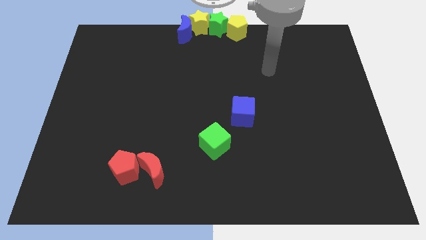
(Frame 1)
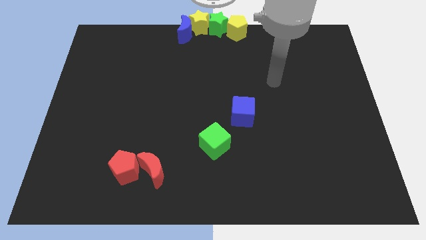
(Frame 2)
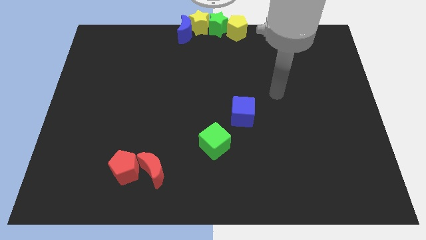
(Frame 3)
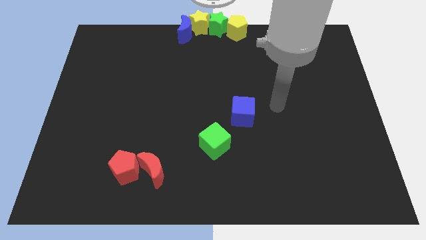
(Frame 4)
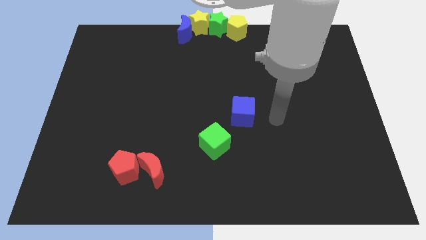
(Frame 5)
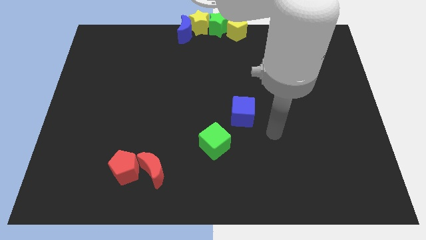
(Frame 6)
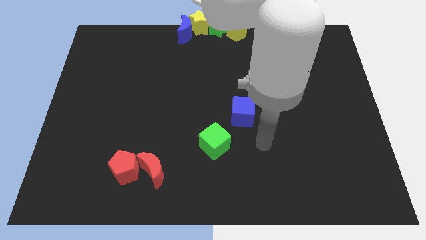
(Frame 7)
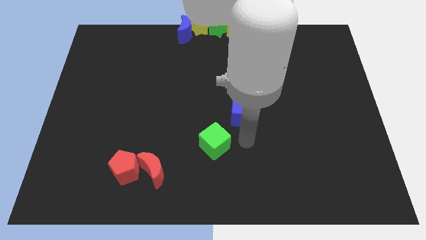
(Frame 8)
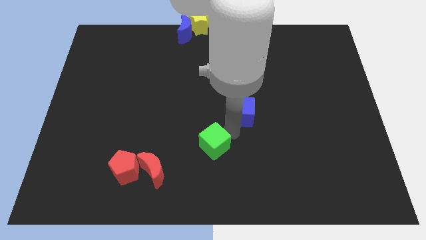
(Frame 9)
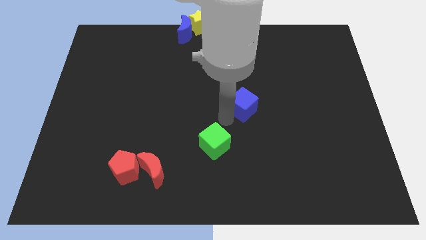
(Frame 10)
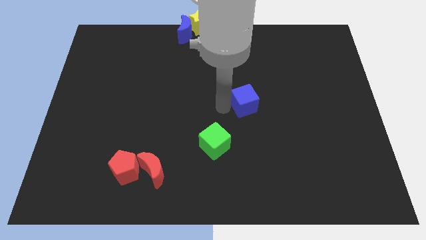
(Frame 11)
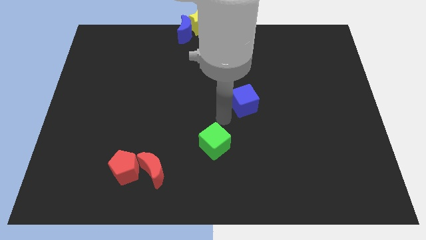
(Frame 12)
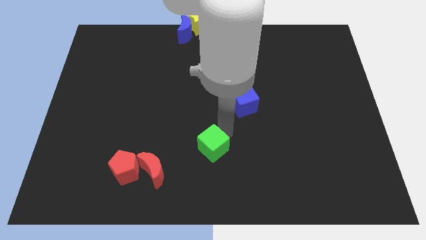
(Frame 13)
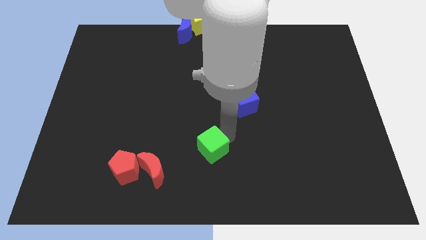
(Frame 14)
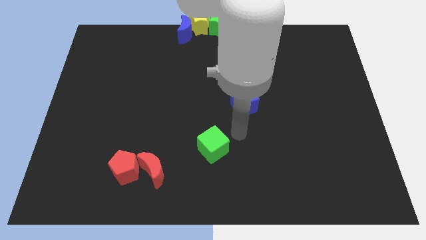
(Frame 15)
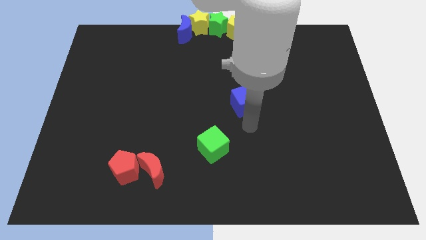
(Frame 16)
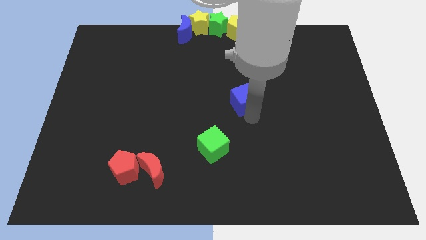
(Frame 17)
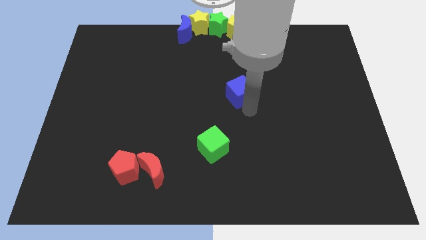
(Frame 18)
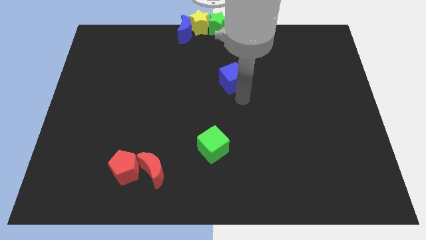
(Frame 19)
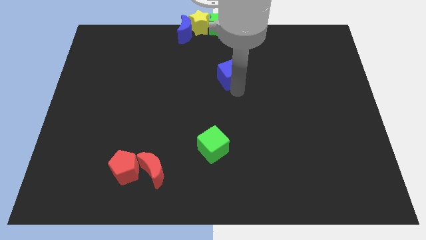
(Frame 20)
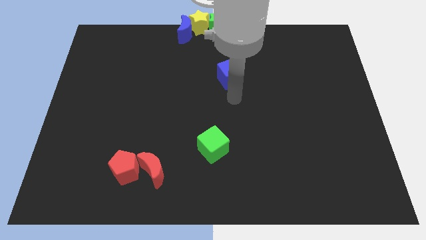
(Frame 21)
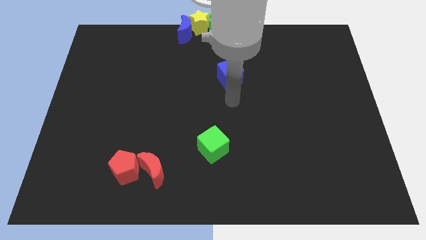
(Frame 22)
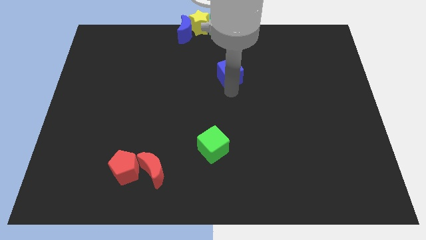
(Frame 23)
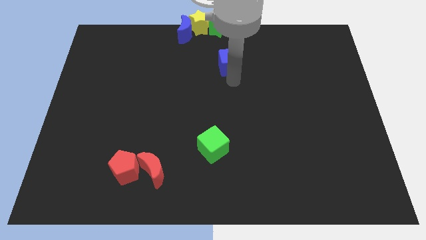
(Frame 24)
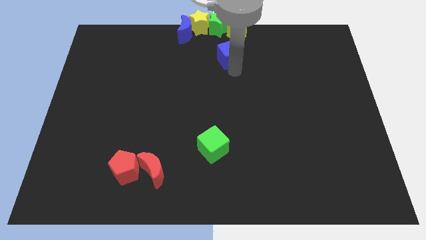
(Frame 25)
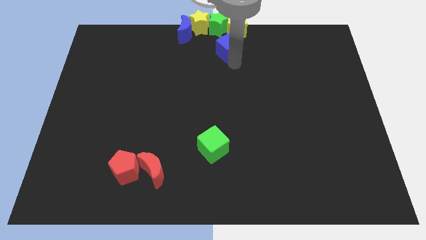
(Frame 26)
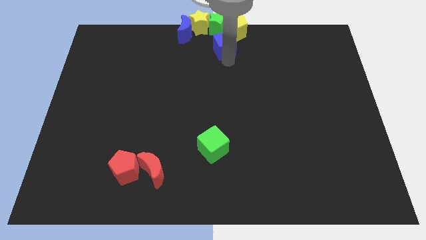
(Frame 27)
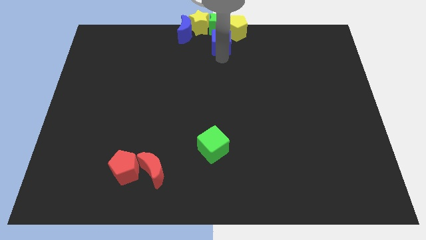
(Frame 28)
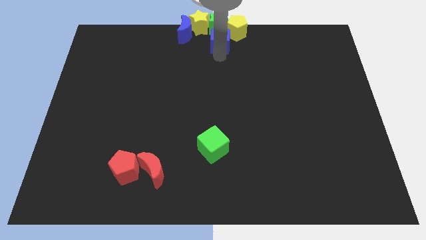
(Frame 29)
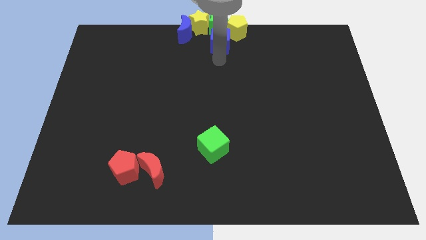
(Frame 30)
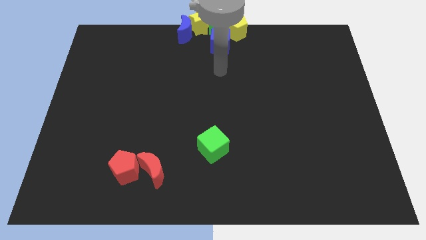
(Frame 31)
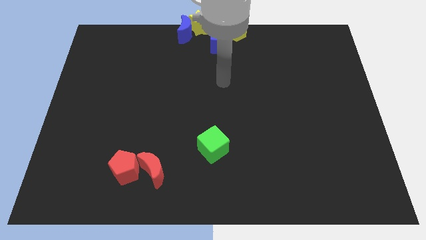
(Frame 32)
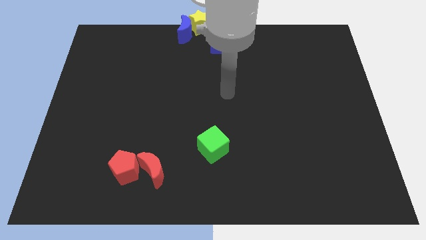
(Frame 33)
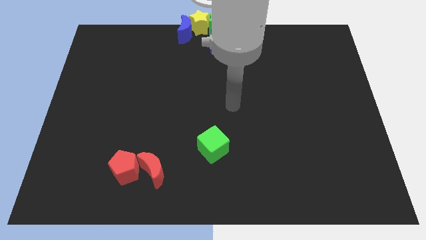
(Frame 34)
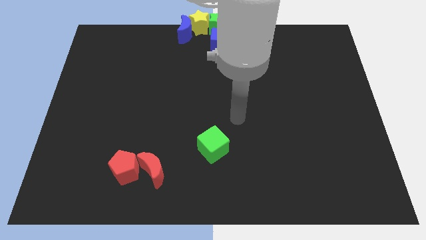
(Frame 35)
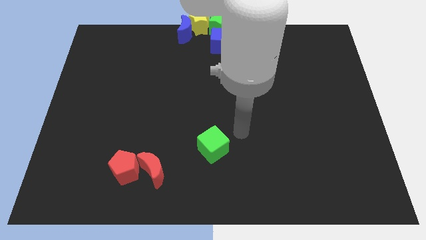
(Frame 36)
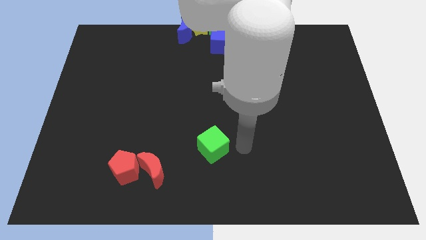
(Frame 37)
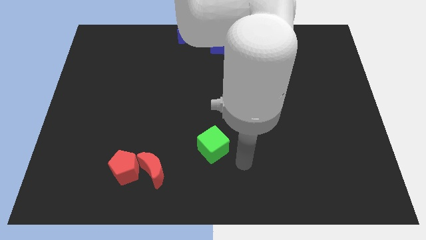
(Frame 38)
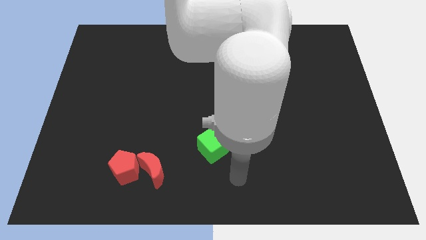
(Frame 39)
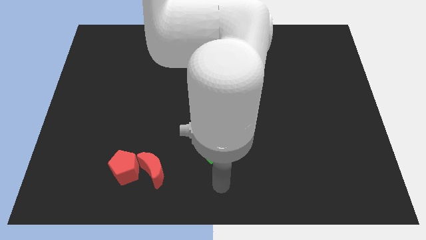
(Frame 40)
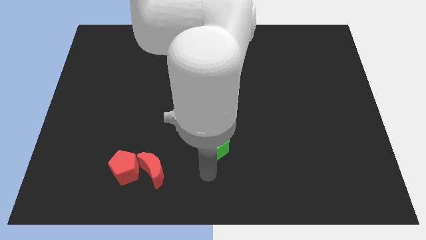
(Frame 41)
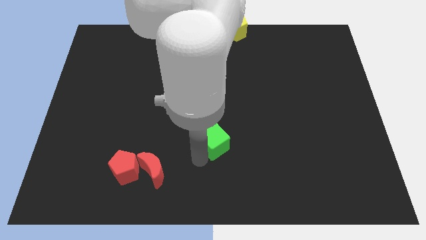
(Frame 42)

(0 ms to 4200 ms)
push the blue cube to the bottom of the green star

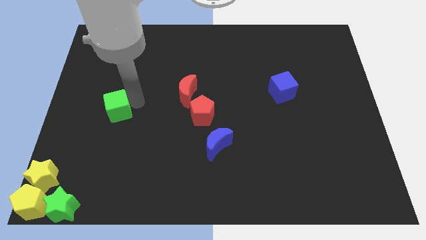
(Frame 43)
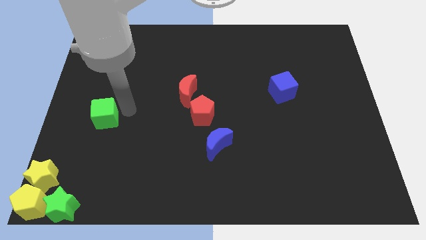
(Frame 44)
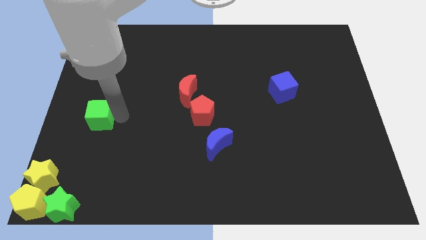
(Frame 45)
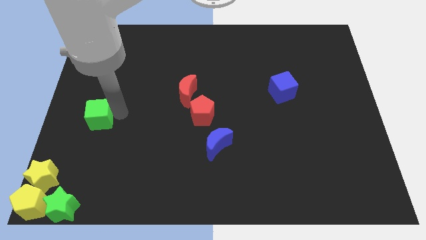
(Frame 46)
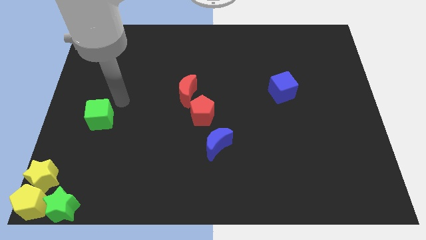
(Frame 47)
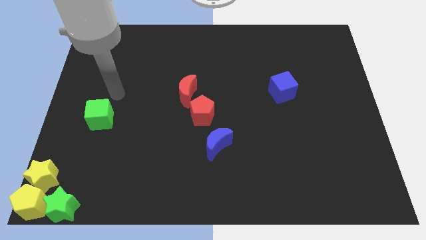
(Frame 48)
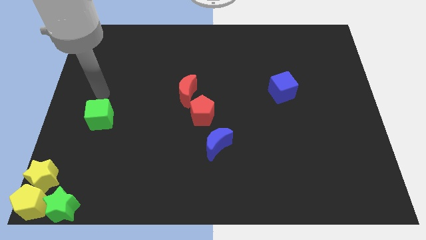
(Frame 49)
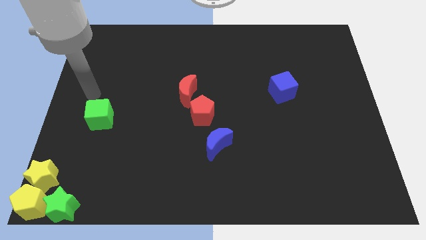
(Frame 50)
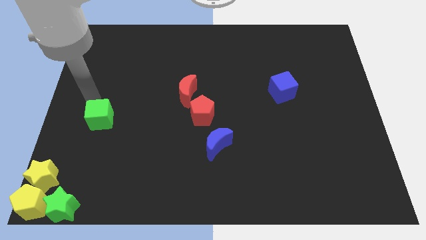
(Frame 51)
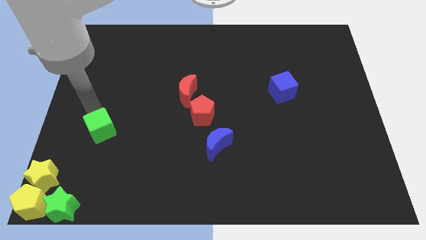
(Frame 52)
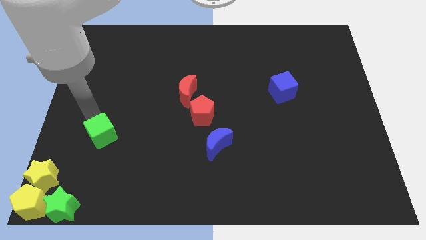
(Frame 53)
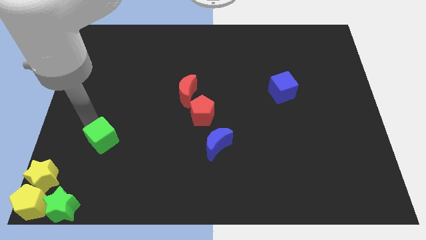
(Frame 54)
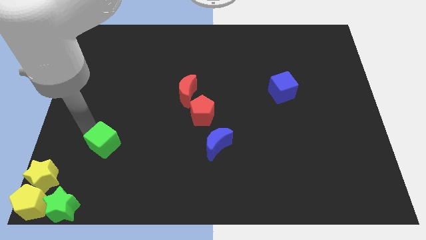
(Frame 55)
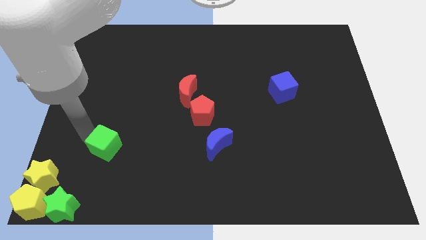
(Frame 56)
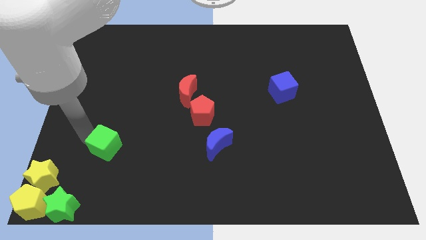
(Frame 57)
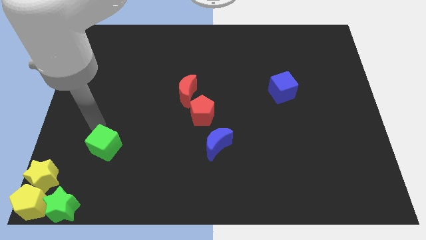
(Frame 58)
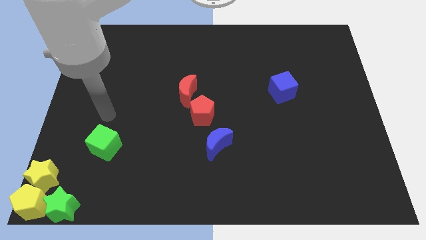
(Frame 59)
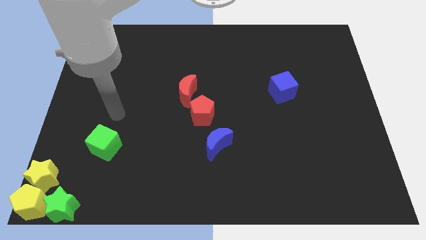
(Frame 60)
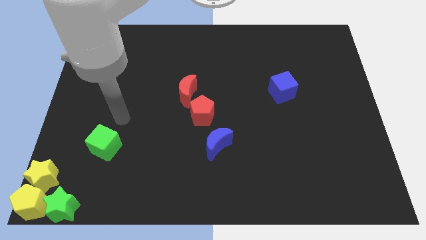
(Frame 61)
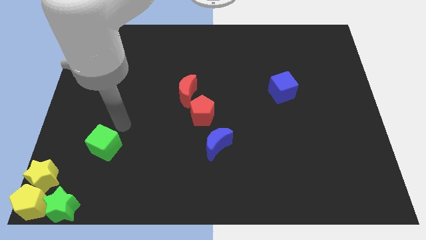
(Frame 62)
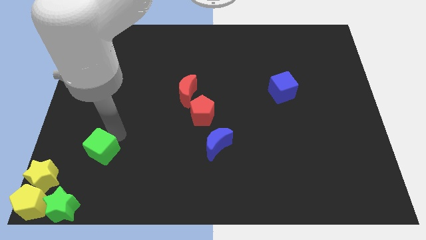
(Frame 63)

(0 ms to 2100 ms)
push the green cube towards the top right of the yellow star

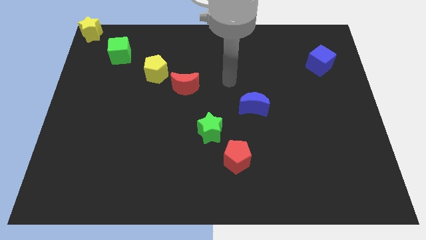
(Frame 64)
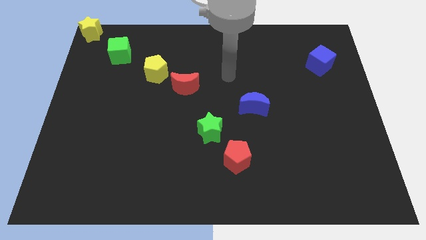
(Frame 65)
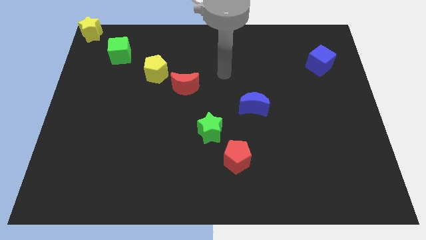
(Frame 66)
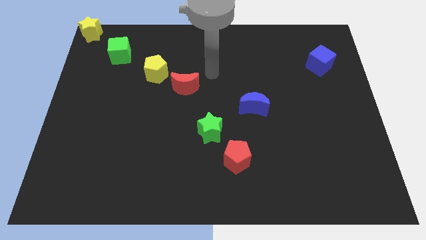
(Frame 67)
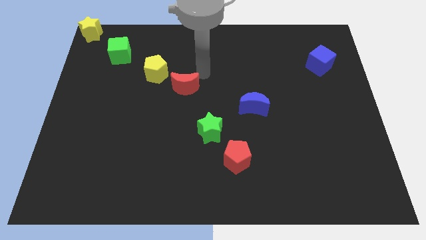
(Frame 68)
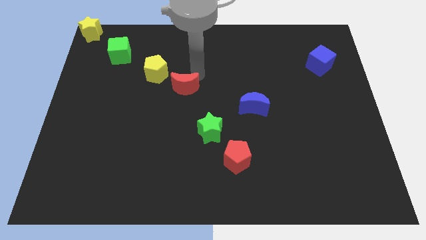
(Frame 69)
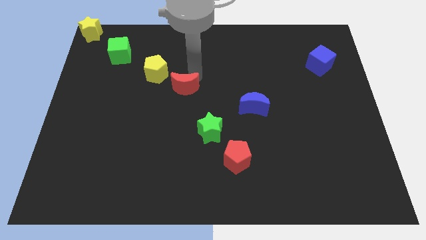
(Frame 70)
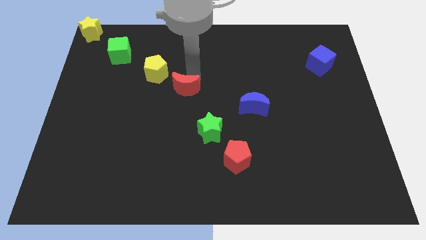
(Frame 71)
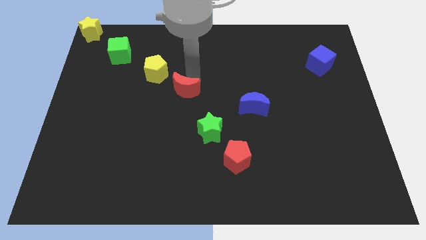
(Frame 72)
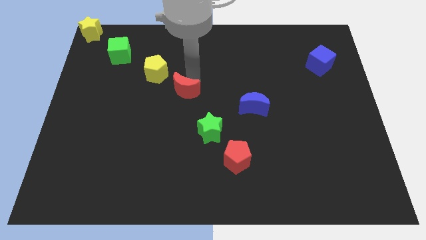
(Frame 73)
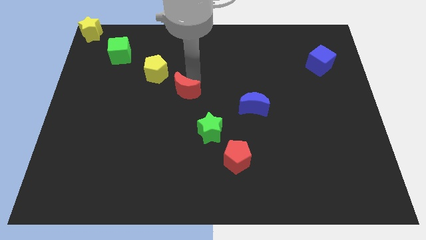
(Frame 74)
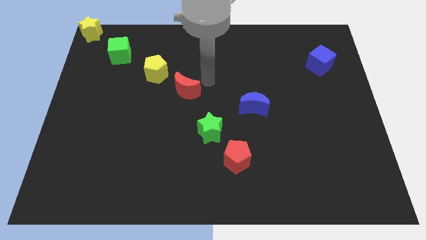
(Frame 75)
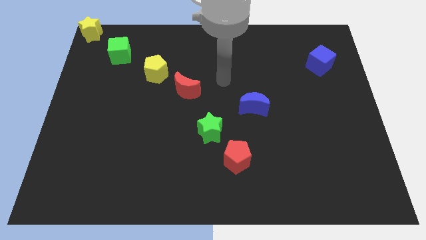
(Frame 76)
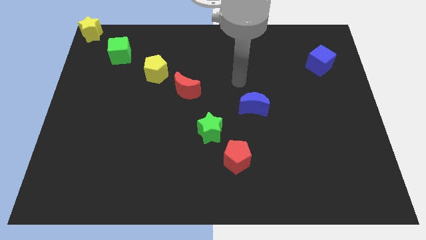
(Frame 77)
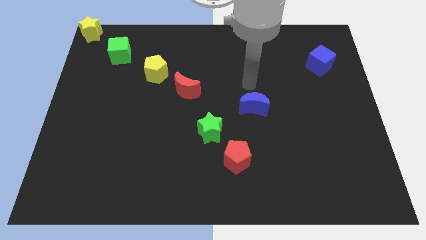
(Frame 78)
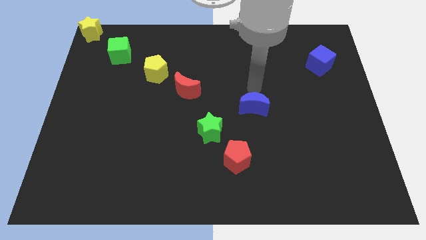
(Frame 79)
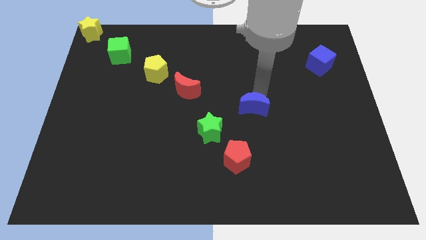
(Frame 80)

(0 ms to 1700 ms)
place red moon to the bottom right of yellow pentagon

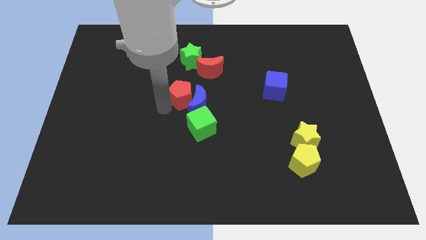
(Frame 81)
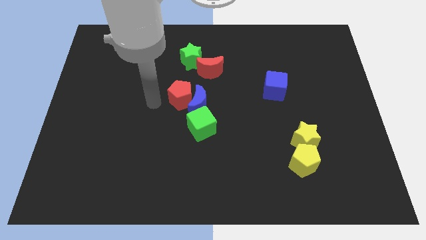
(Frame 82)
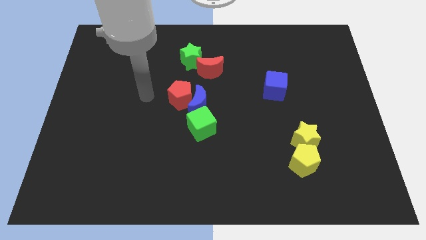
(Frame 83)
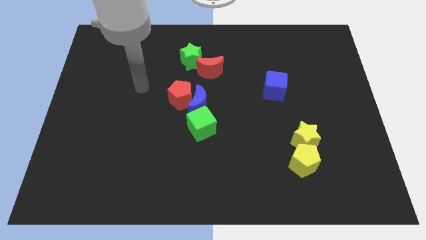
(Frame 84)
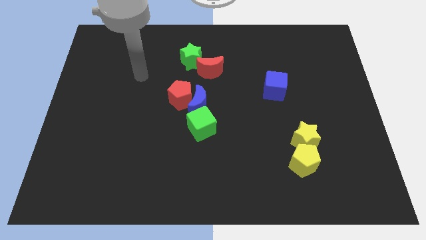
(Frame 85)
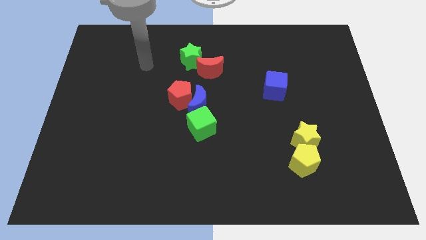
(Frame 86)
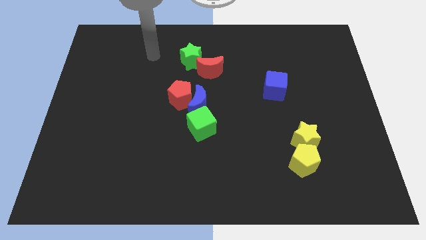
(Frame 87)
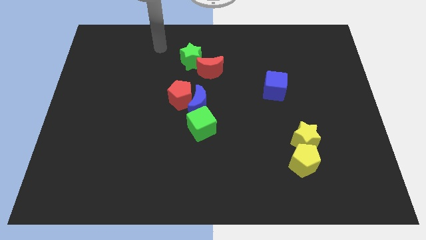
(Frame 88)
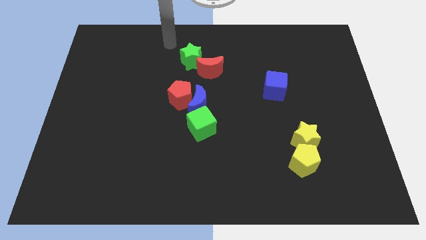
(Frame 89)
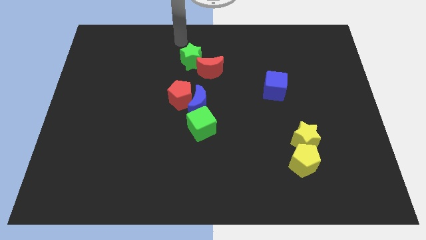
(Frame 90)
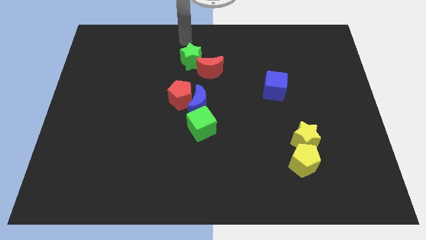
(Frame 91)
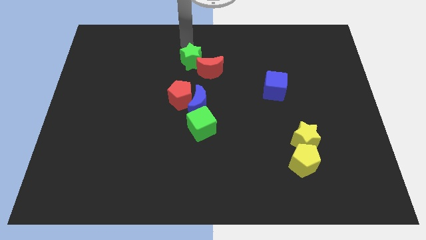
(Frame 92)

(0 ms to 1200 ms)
move your arm away from red pentagon
